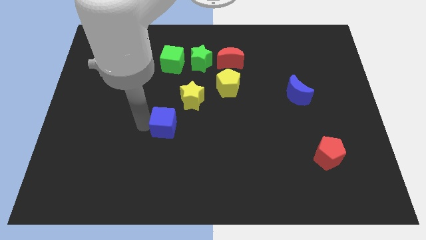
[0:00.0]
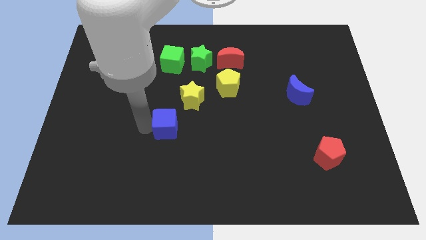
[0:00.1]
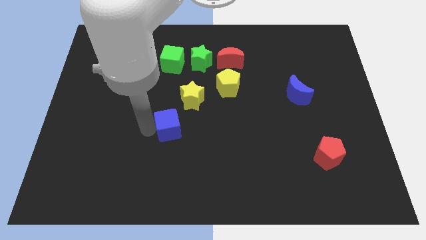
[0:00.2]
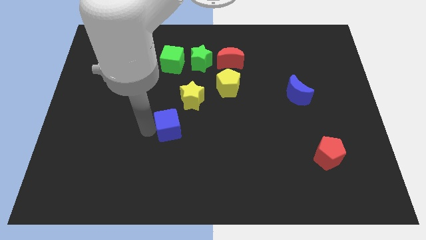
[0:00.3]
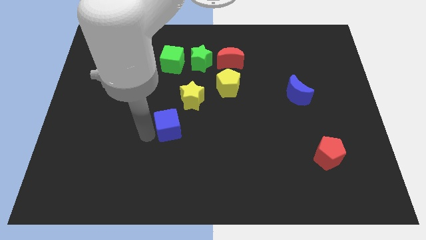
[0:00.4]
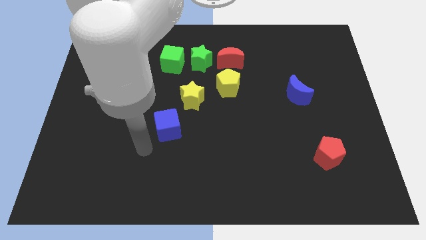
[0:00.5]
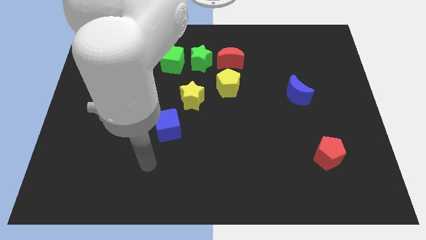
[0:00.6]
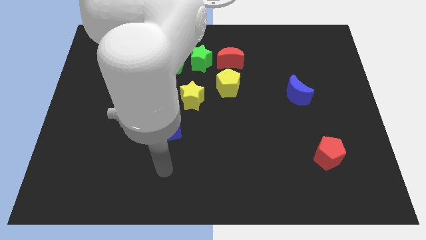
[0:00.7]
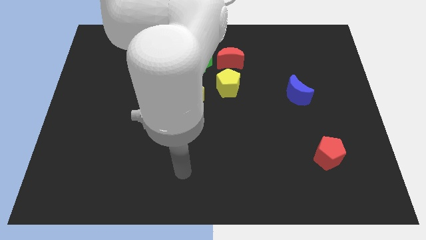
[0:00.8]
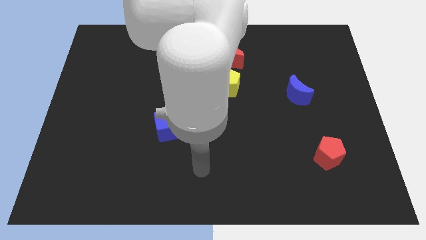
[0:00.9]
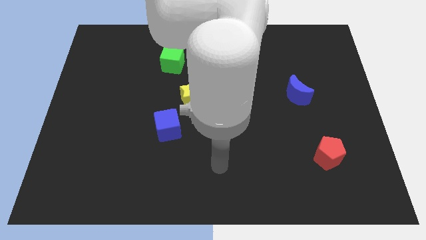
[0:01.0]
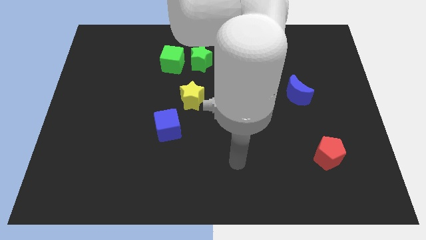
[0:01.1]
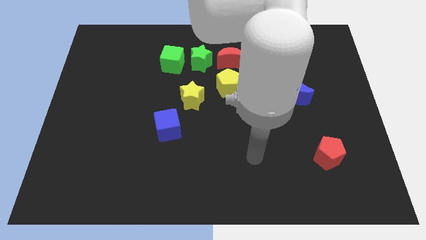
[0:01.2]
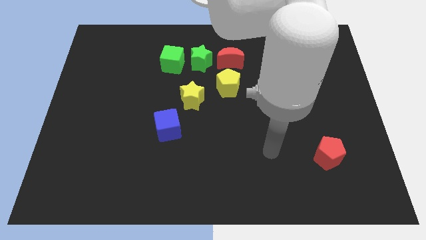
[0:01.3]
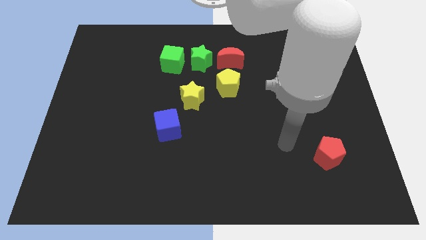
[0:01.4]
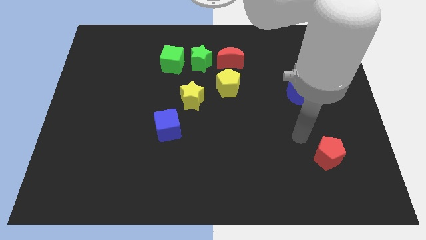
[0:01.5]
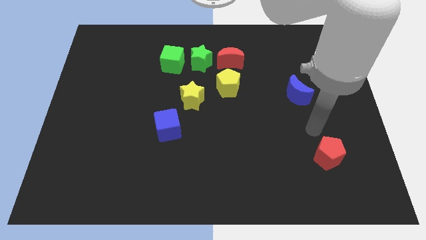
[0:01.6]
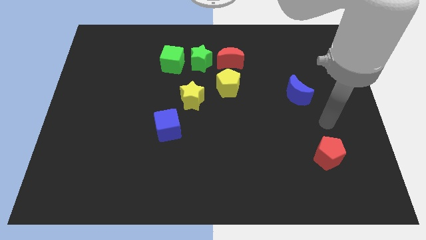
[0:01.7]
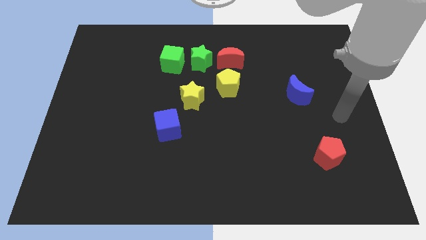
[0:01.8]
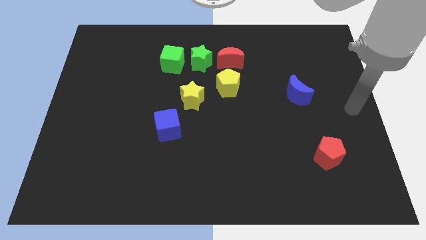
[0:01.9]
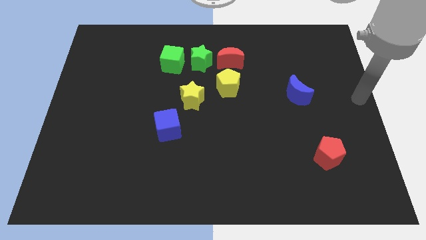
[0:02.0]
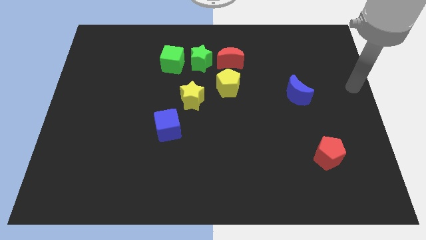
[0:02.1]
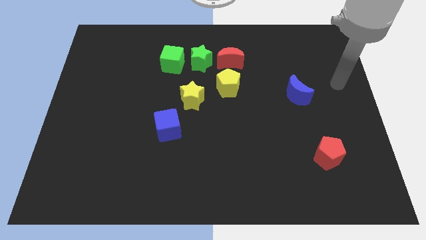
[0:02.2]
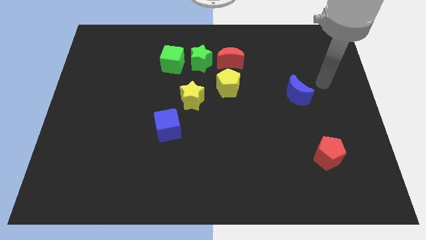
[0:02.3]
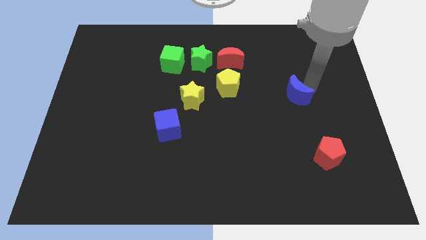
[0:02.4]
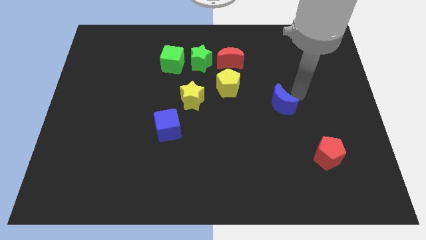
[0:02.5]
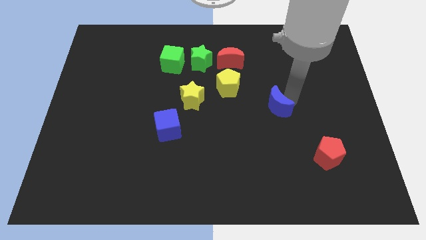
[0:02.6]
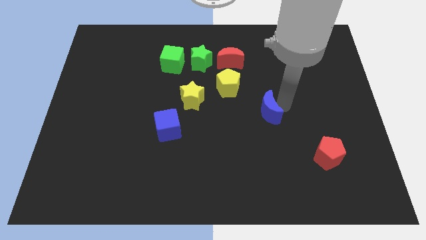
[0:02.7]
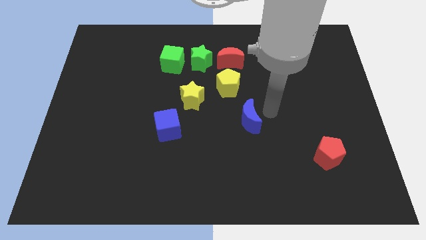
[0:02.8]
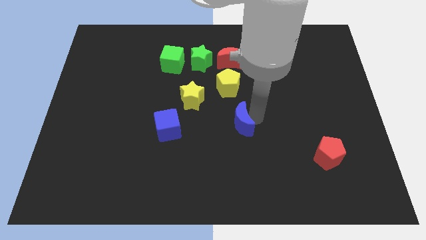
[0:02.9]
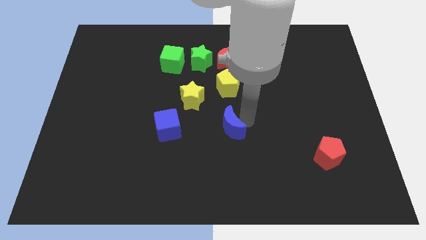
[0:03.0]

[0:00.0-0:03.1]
move blue moon below yellow pentagon

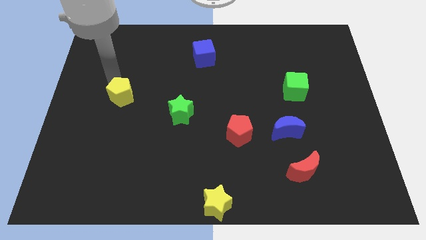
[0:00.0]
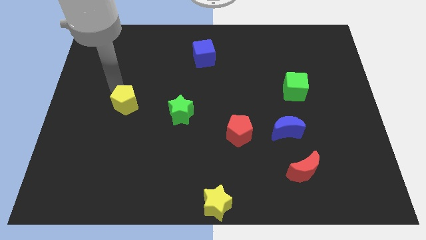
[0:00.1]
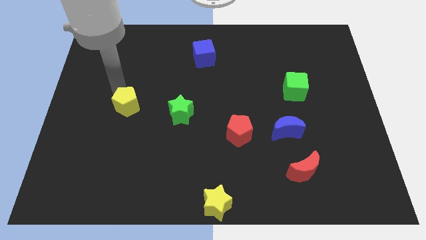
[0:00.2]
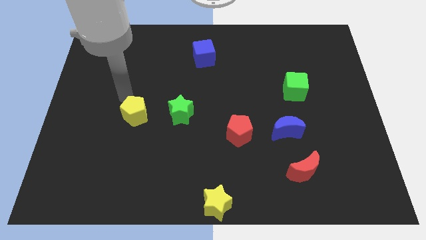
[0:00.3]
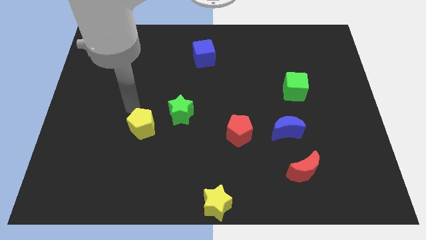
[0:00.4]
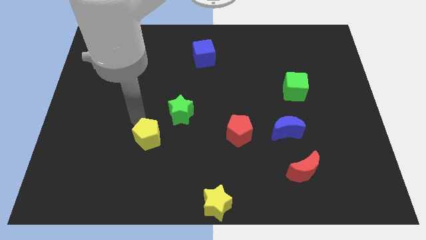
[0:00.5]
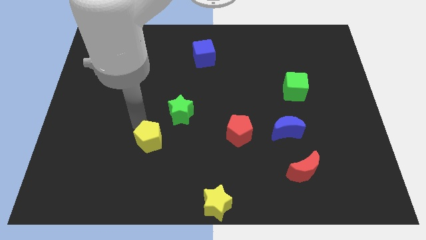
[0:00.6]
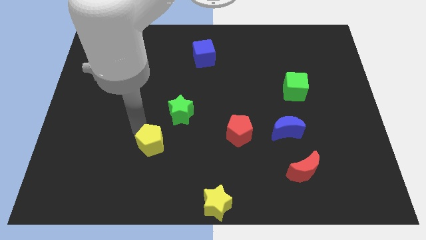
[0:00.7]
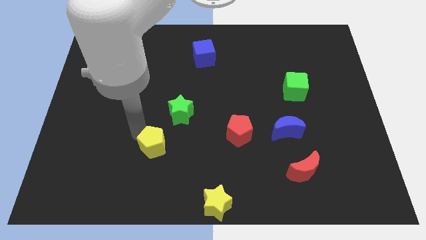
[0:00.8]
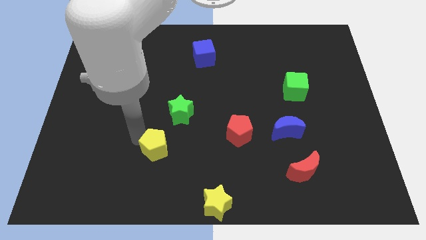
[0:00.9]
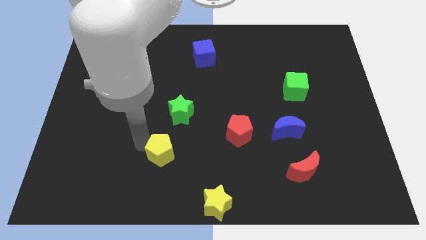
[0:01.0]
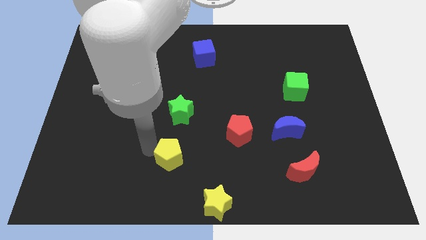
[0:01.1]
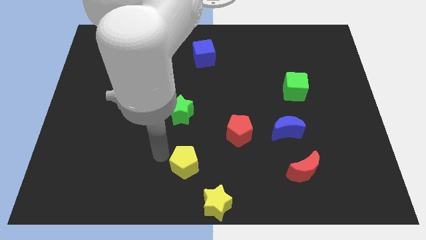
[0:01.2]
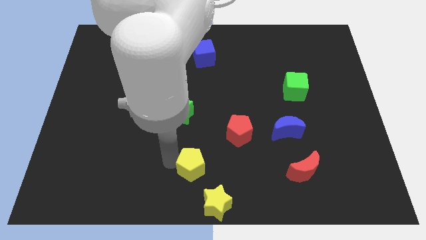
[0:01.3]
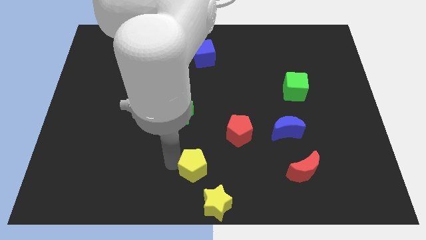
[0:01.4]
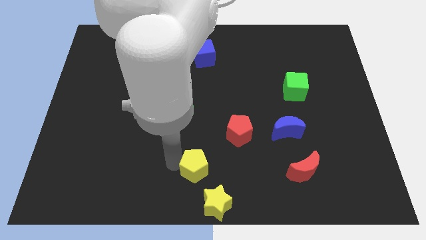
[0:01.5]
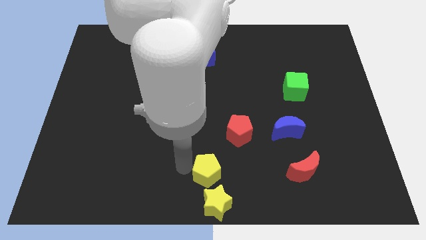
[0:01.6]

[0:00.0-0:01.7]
push the yellow pentagon to the top left side of the yellow star

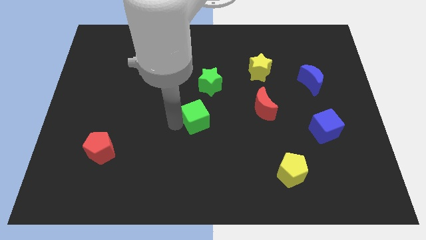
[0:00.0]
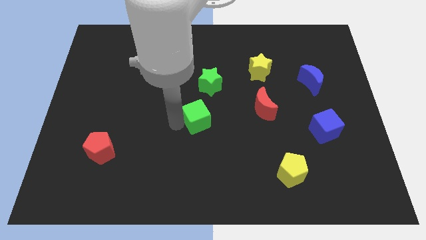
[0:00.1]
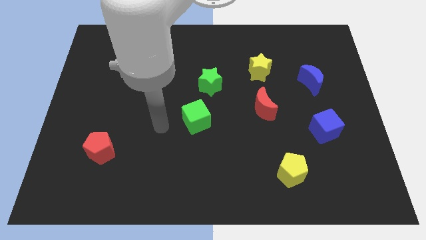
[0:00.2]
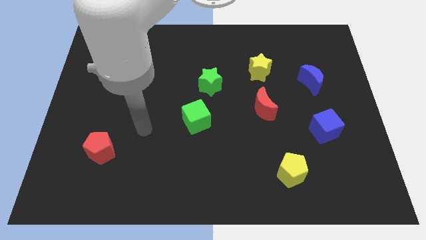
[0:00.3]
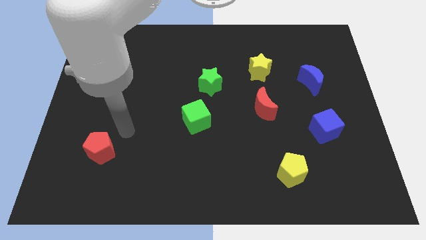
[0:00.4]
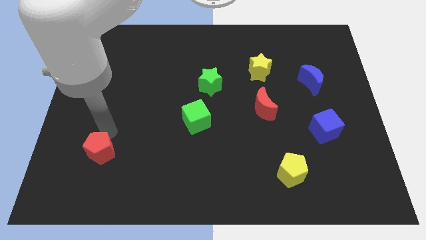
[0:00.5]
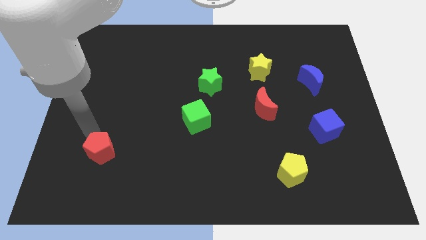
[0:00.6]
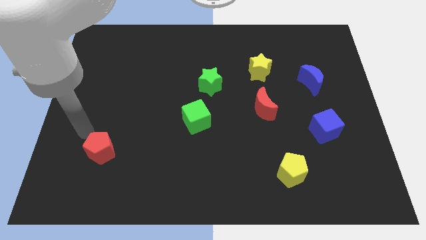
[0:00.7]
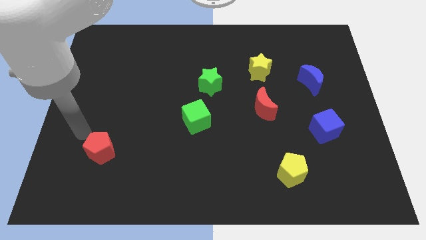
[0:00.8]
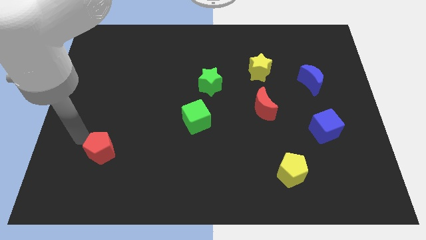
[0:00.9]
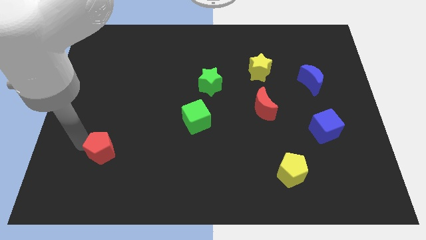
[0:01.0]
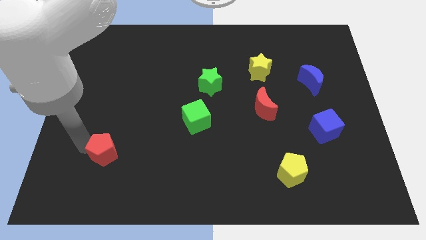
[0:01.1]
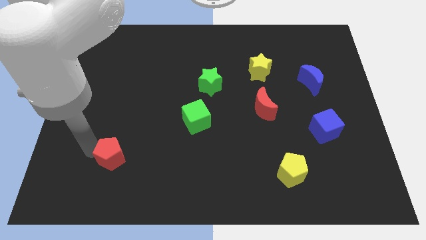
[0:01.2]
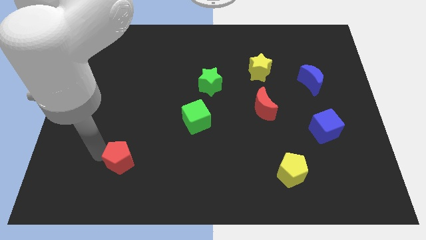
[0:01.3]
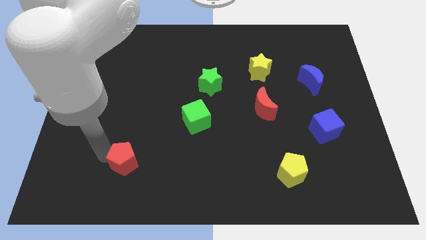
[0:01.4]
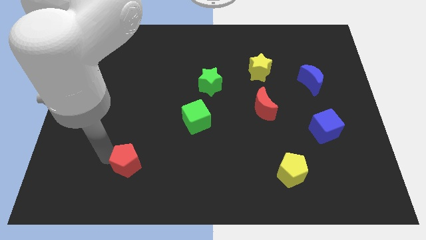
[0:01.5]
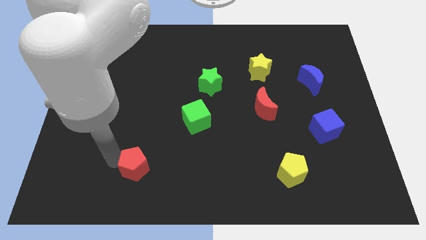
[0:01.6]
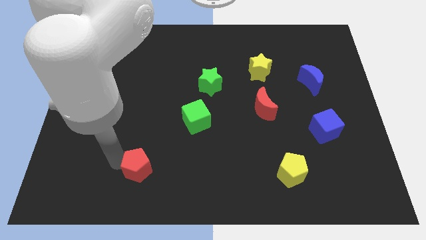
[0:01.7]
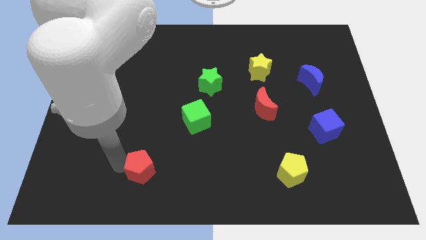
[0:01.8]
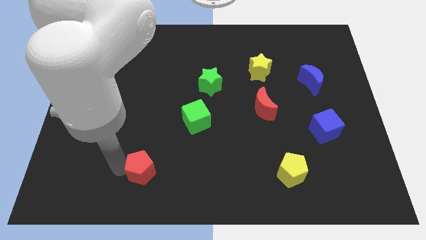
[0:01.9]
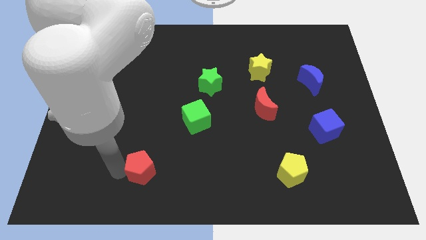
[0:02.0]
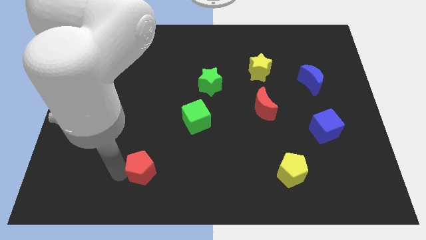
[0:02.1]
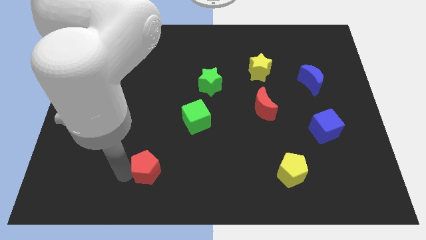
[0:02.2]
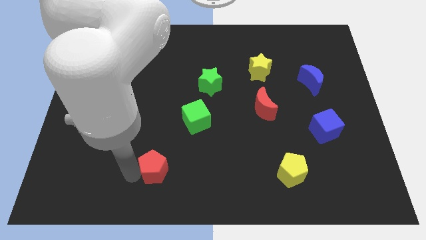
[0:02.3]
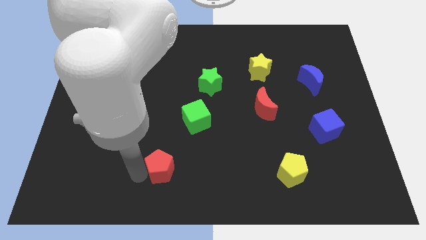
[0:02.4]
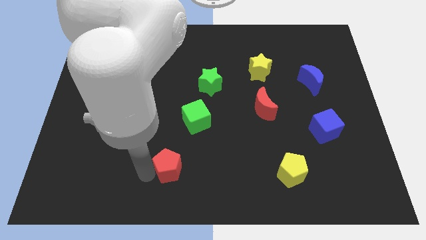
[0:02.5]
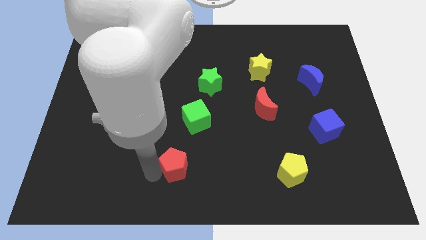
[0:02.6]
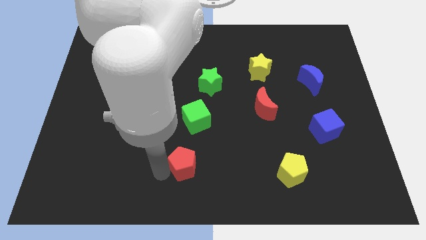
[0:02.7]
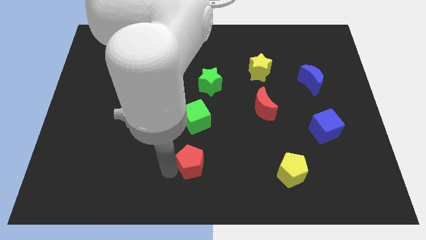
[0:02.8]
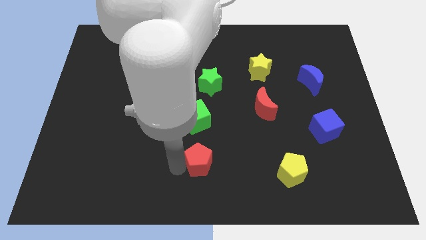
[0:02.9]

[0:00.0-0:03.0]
place the red pentagon below the green cube

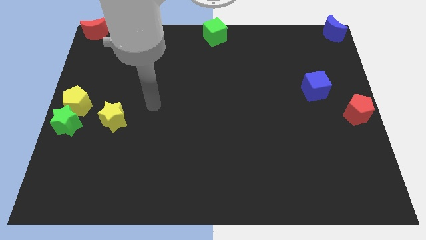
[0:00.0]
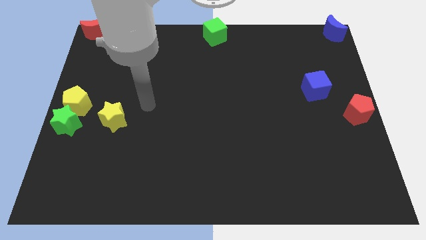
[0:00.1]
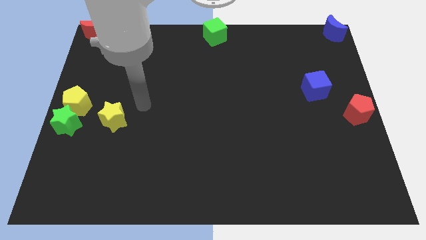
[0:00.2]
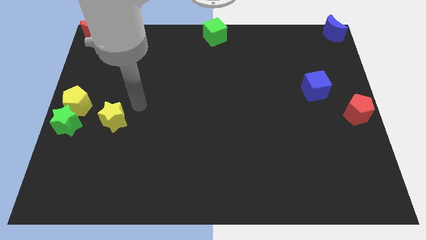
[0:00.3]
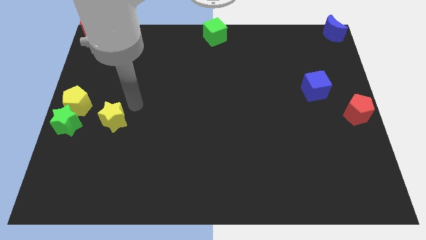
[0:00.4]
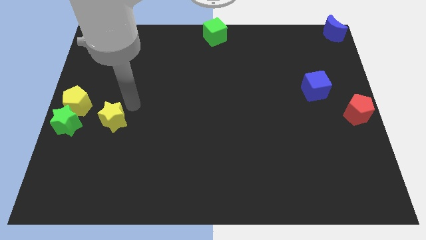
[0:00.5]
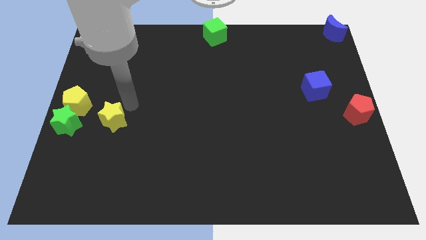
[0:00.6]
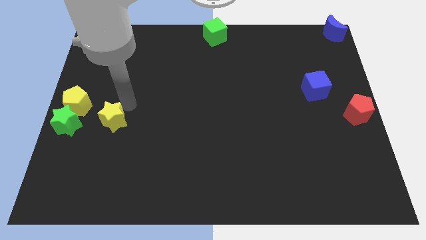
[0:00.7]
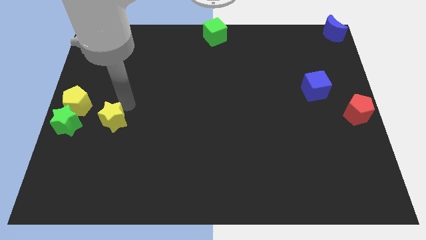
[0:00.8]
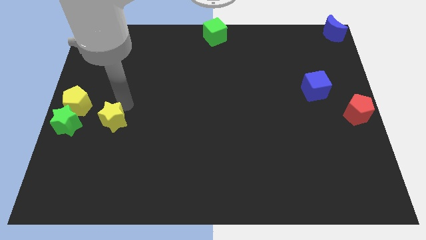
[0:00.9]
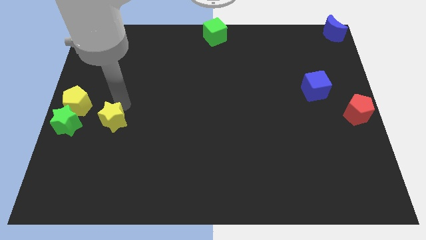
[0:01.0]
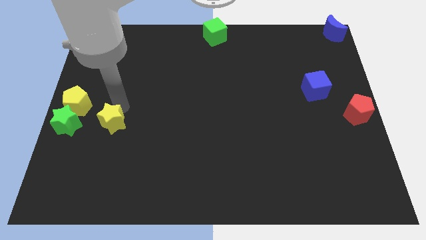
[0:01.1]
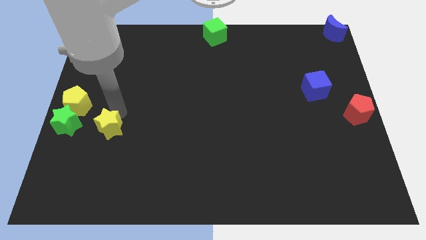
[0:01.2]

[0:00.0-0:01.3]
place the yellow star parallel to green star
